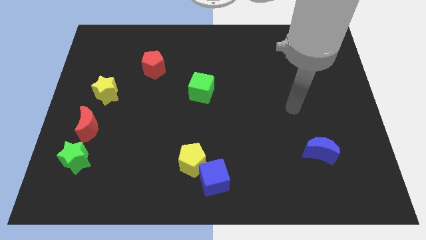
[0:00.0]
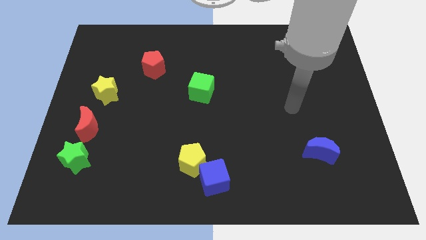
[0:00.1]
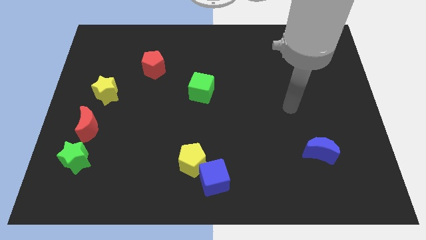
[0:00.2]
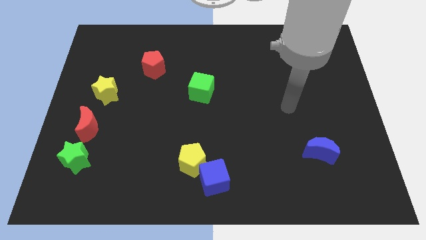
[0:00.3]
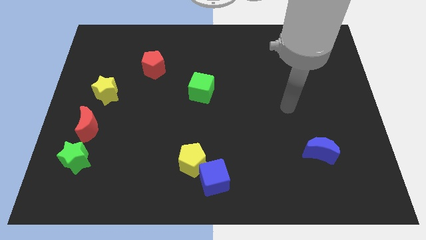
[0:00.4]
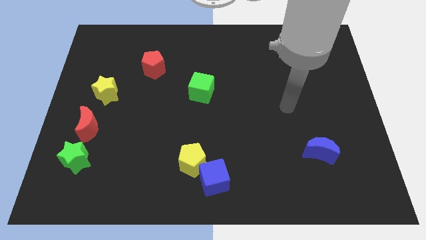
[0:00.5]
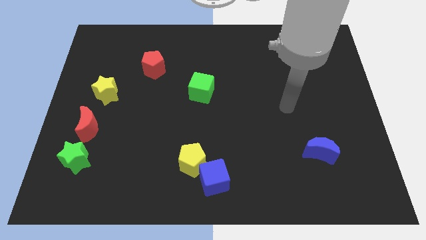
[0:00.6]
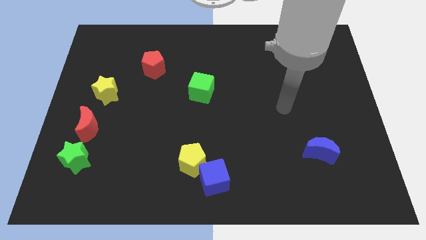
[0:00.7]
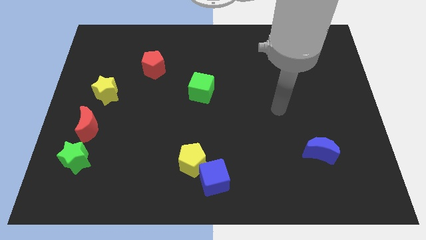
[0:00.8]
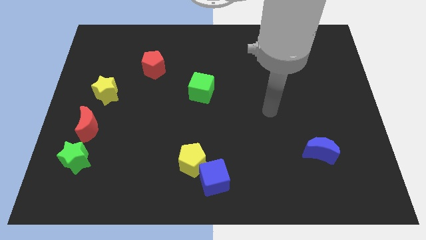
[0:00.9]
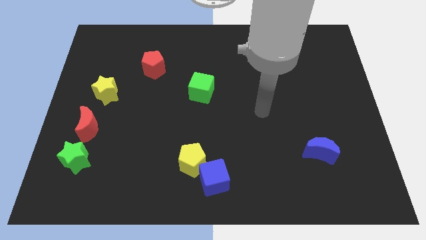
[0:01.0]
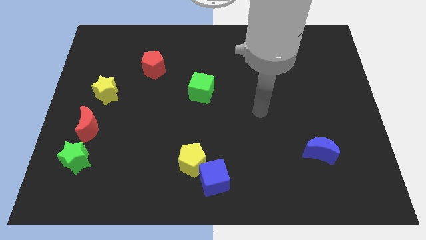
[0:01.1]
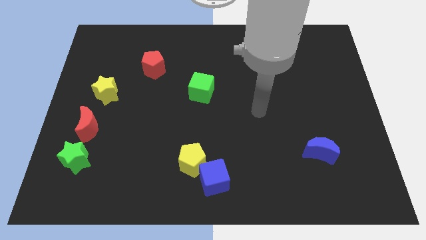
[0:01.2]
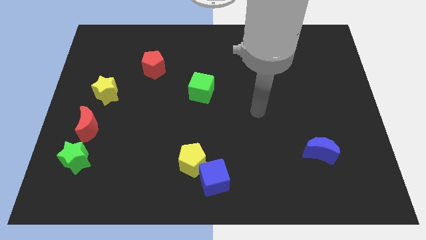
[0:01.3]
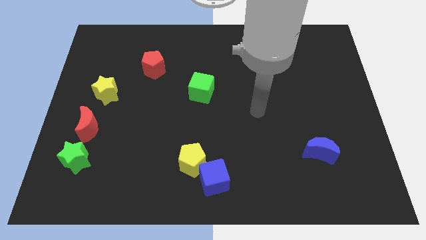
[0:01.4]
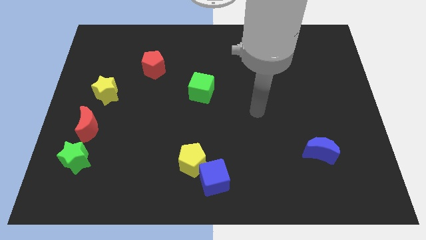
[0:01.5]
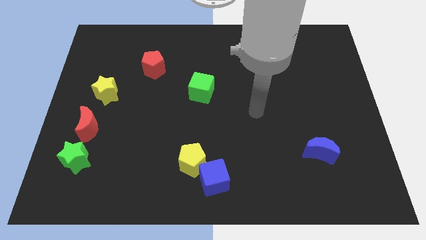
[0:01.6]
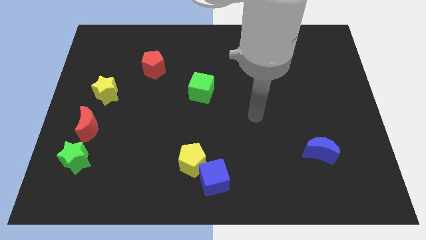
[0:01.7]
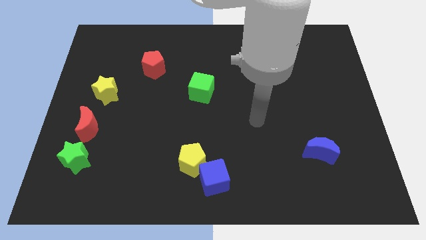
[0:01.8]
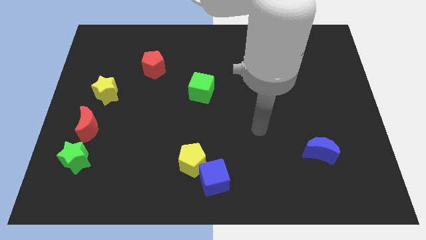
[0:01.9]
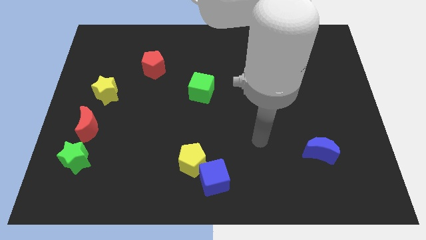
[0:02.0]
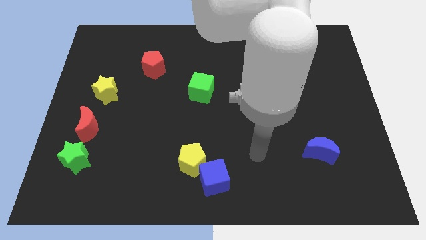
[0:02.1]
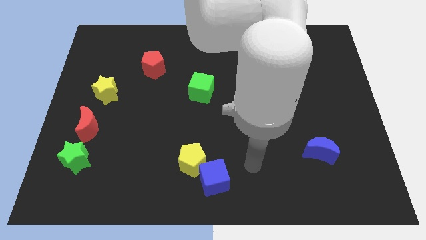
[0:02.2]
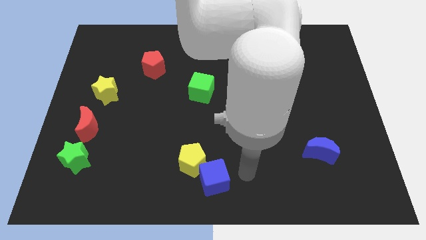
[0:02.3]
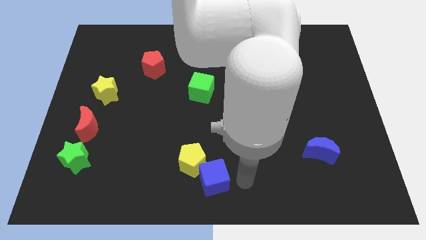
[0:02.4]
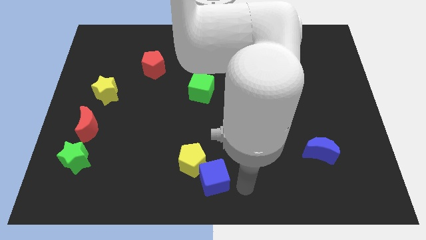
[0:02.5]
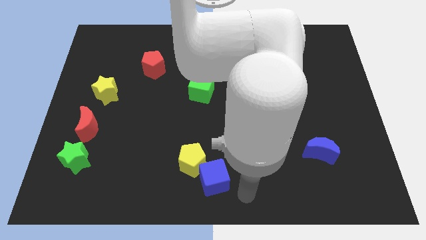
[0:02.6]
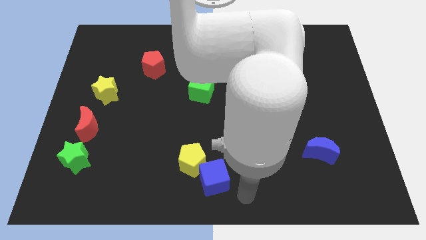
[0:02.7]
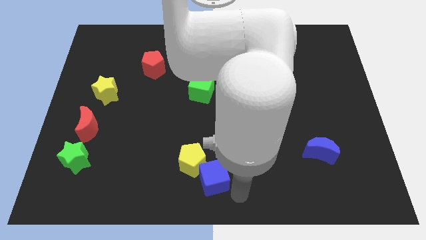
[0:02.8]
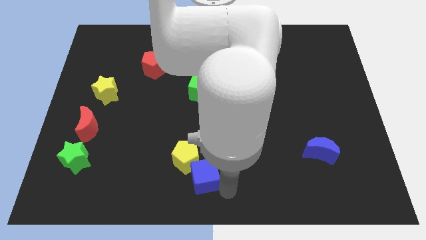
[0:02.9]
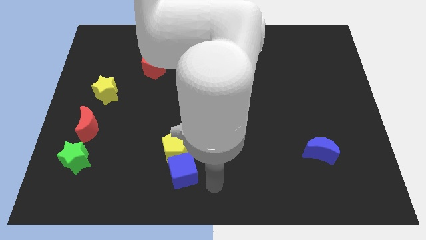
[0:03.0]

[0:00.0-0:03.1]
touch the bottom of the blue cube

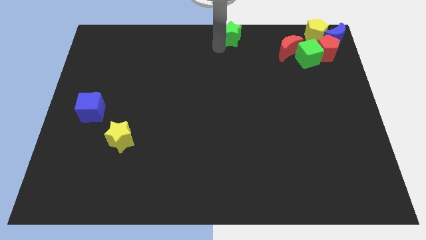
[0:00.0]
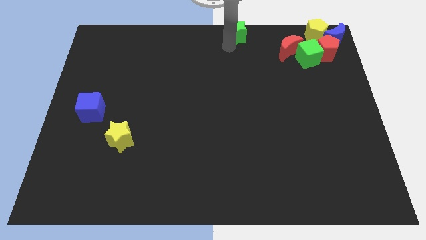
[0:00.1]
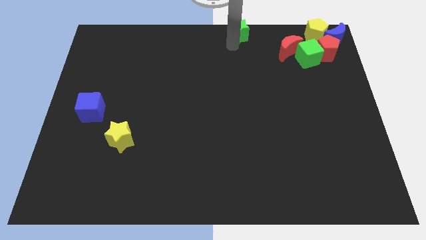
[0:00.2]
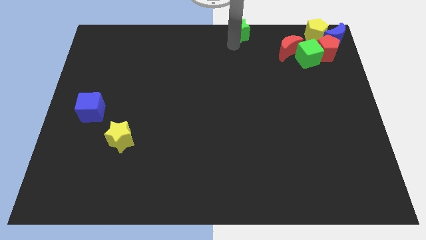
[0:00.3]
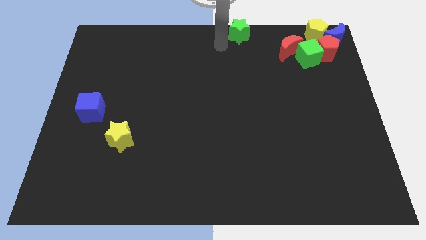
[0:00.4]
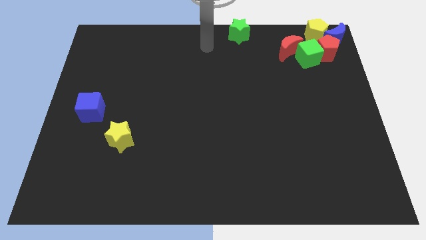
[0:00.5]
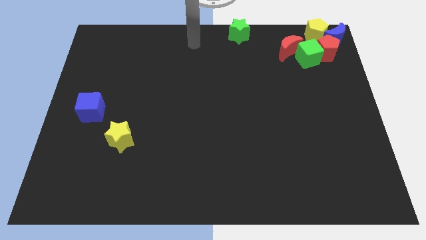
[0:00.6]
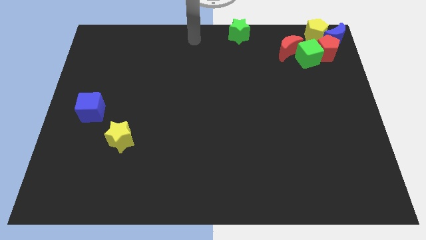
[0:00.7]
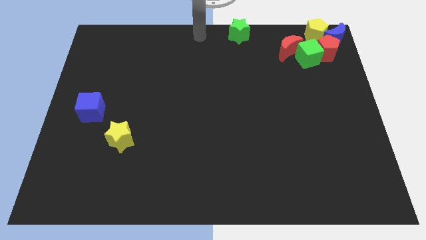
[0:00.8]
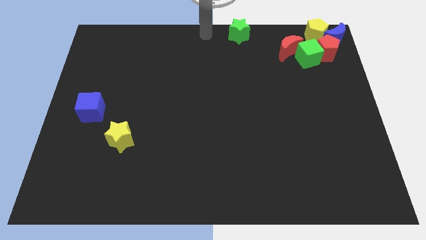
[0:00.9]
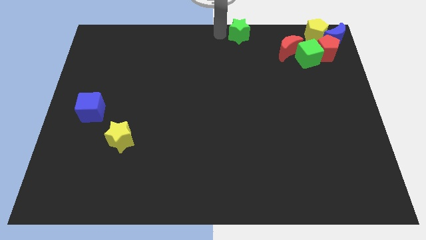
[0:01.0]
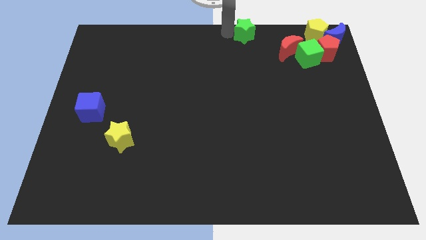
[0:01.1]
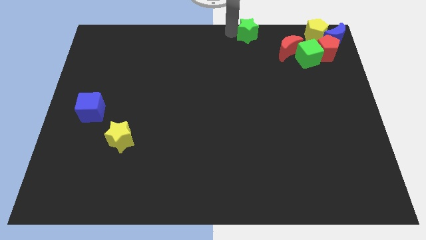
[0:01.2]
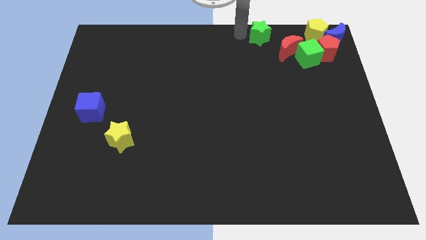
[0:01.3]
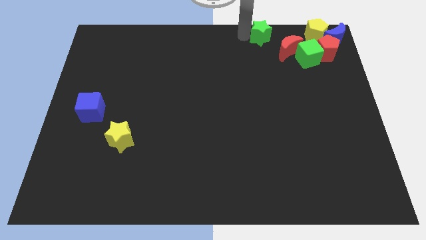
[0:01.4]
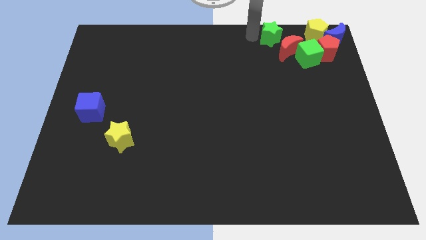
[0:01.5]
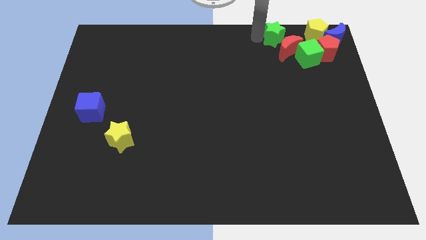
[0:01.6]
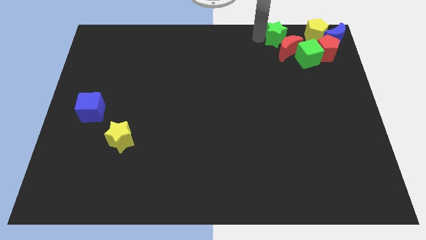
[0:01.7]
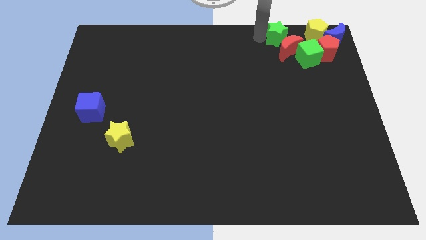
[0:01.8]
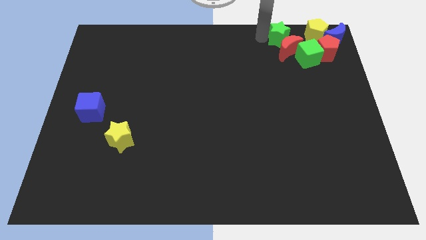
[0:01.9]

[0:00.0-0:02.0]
push the green star to the top right side of the board

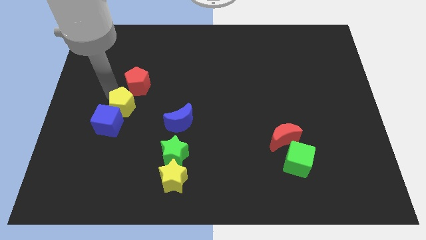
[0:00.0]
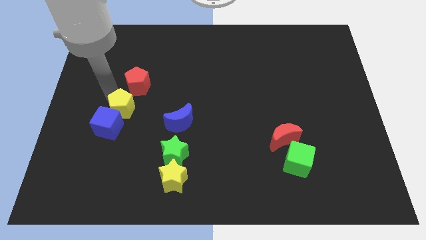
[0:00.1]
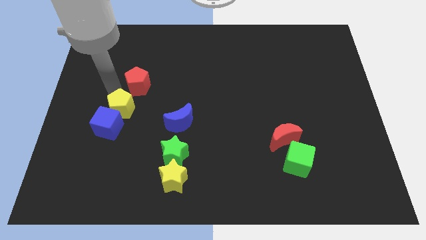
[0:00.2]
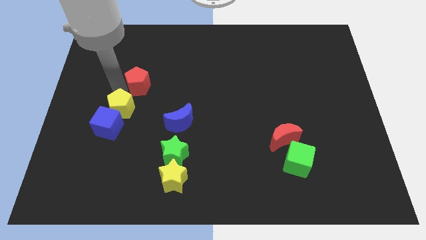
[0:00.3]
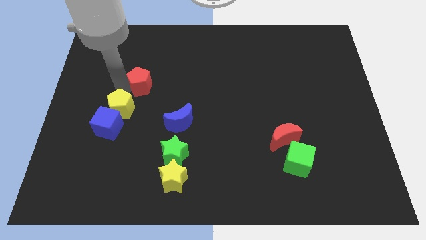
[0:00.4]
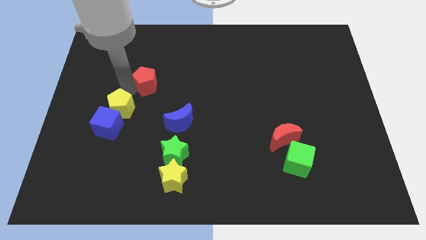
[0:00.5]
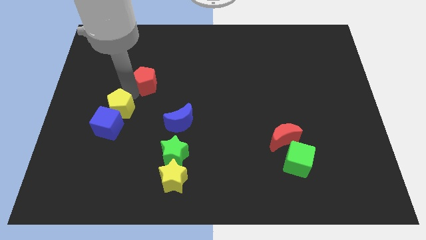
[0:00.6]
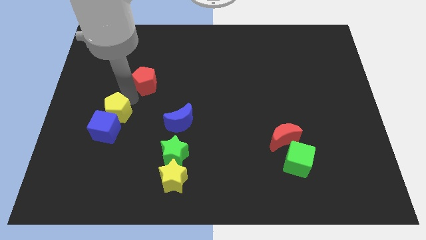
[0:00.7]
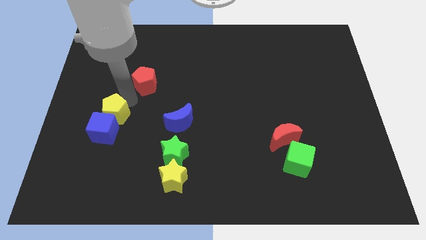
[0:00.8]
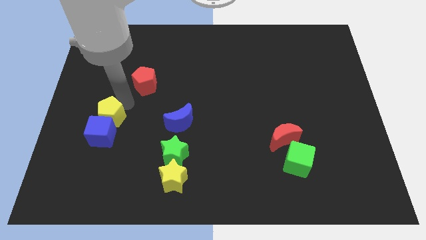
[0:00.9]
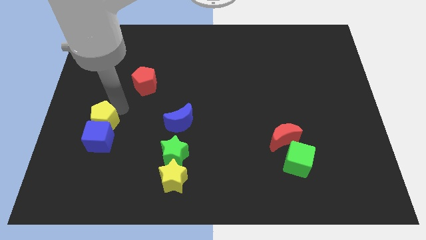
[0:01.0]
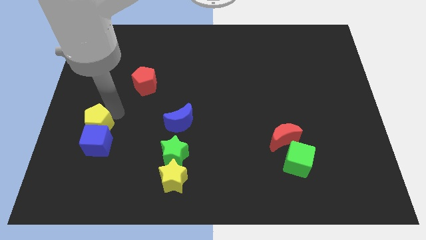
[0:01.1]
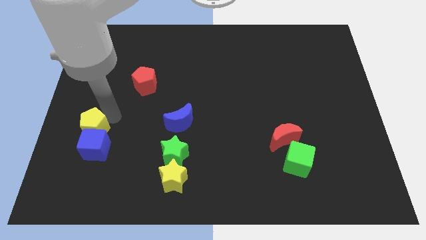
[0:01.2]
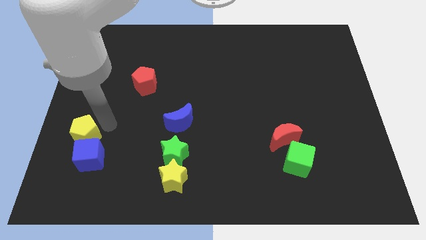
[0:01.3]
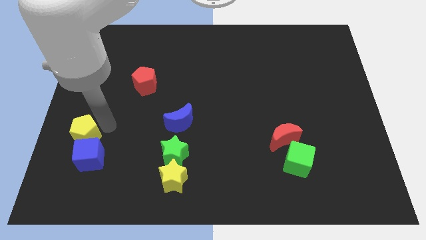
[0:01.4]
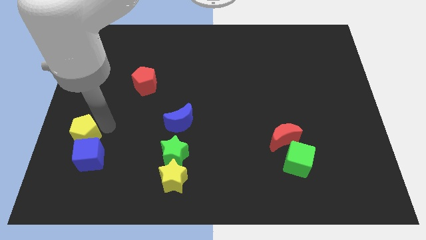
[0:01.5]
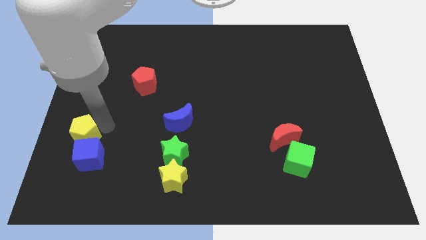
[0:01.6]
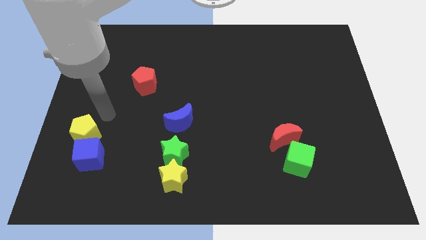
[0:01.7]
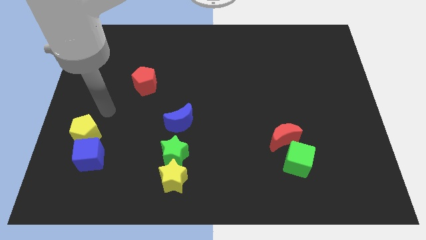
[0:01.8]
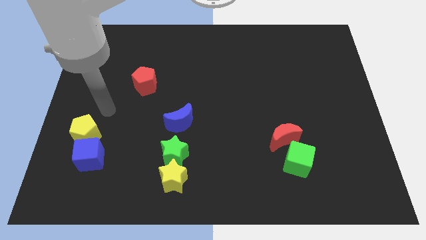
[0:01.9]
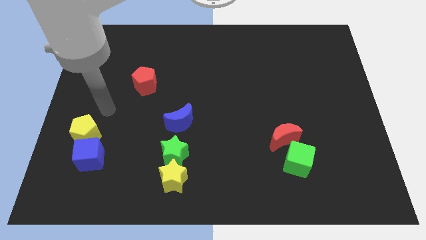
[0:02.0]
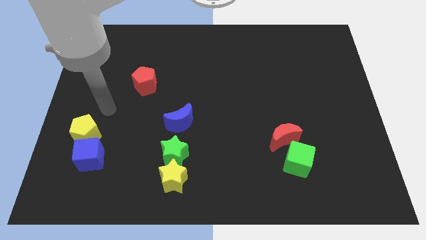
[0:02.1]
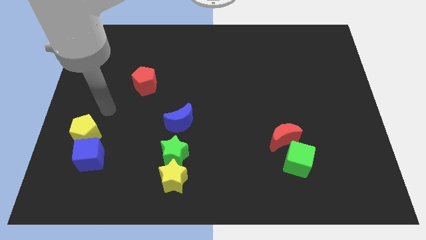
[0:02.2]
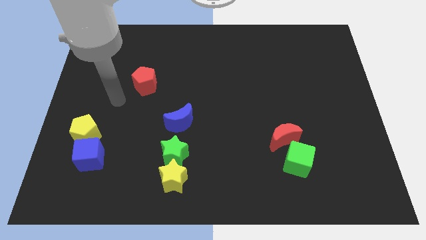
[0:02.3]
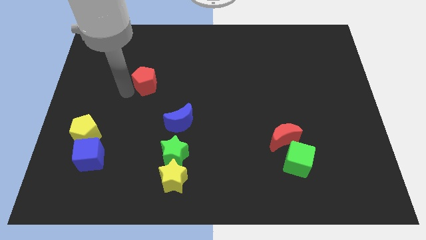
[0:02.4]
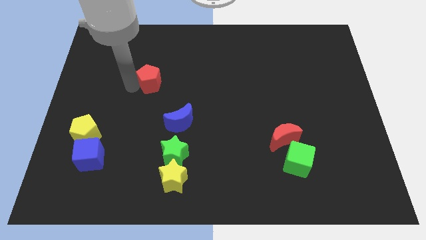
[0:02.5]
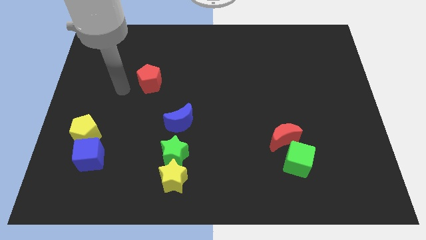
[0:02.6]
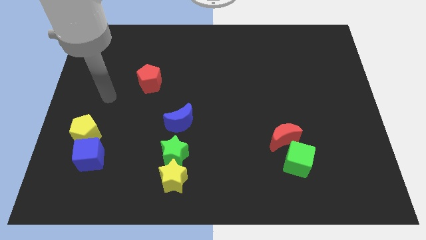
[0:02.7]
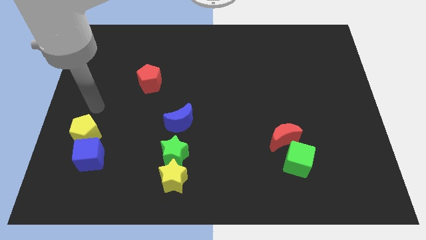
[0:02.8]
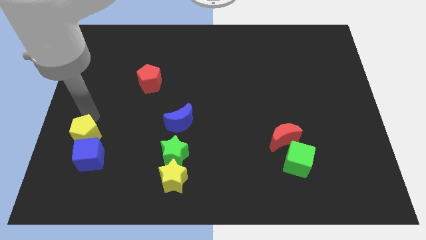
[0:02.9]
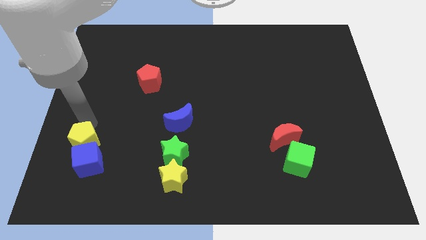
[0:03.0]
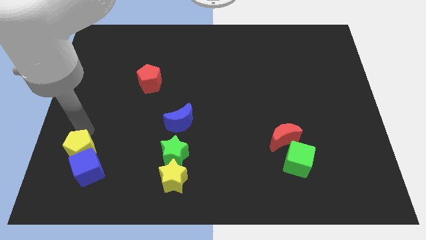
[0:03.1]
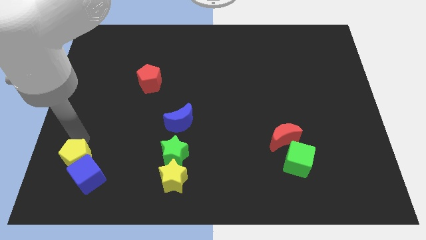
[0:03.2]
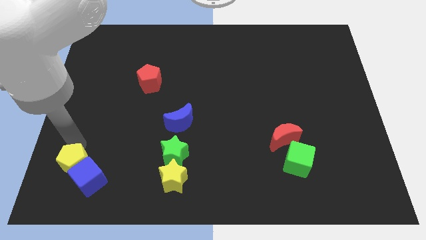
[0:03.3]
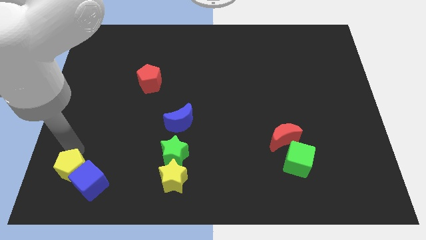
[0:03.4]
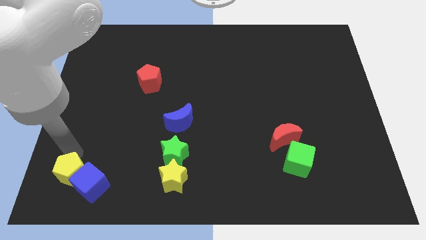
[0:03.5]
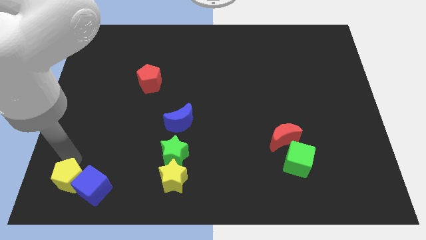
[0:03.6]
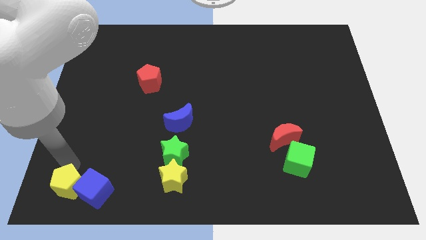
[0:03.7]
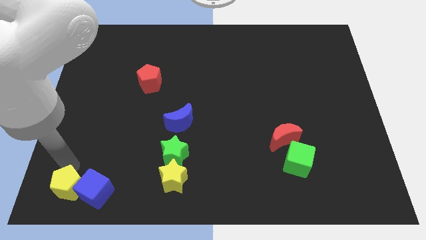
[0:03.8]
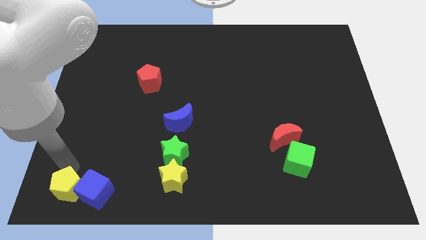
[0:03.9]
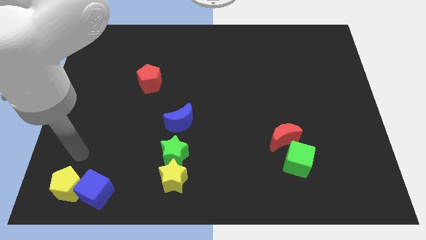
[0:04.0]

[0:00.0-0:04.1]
push yellow pentagon along with blue cube towards bottom left
